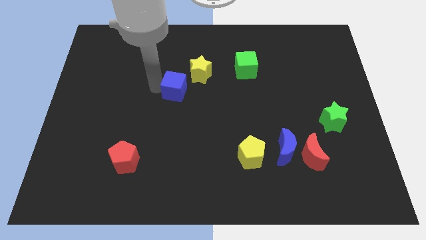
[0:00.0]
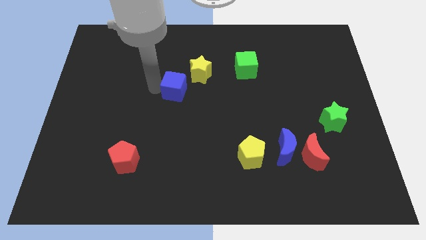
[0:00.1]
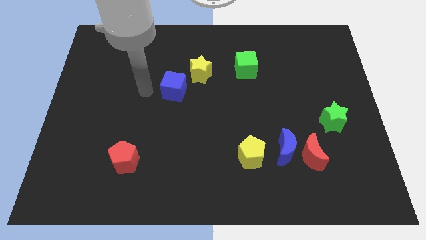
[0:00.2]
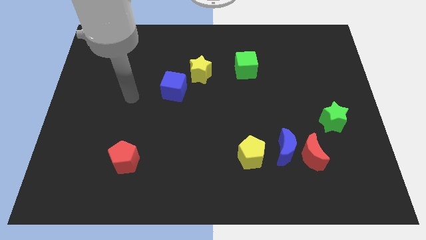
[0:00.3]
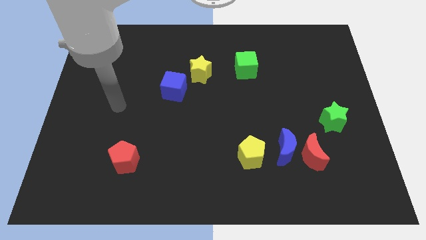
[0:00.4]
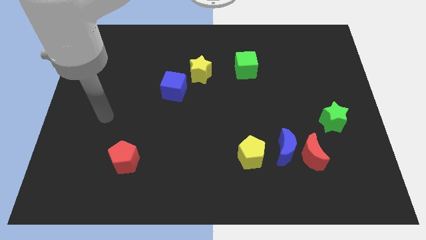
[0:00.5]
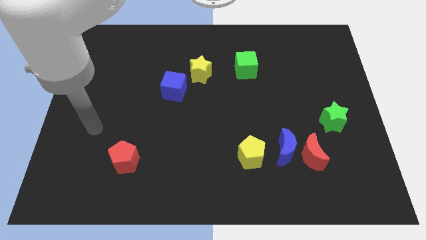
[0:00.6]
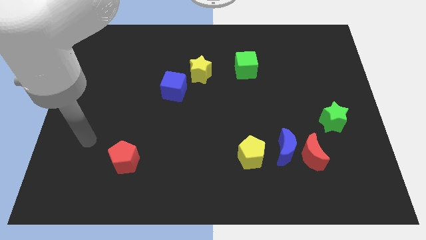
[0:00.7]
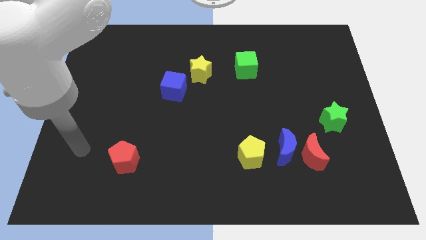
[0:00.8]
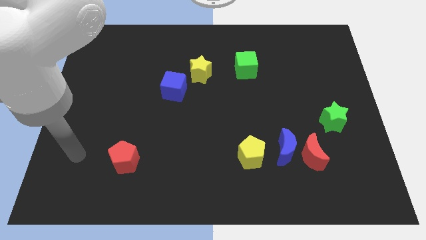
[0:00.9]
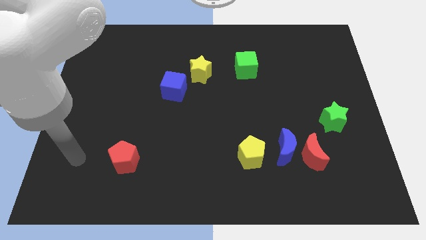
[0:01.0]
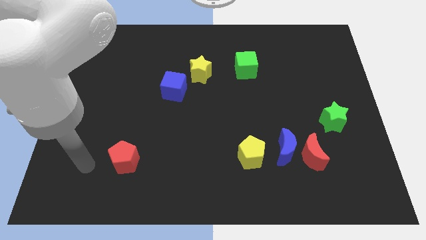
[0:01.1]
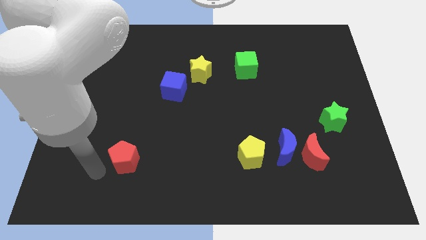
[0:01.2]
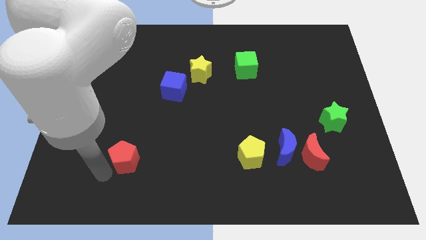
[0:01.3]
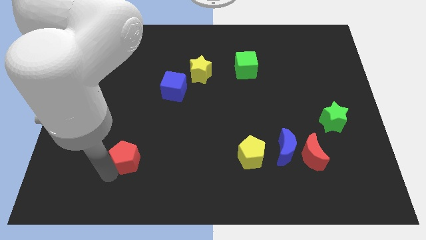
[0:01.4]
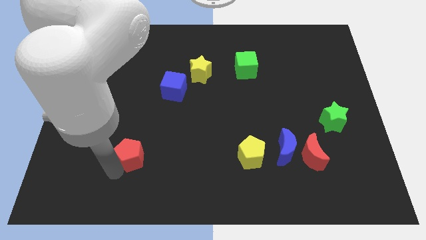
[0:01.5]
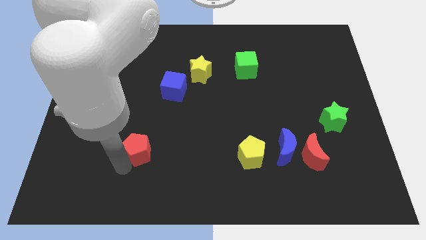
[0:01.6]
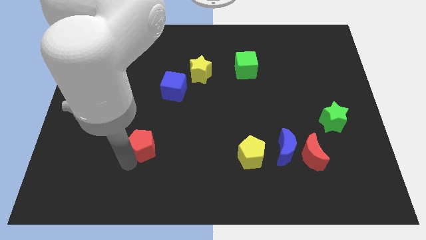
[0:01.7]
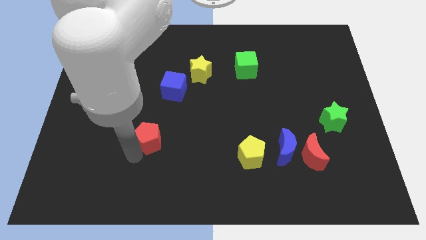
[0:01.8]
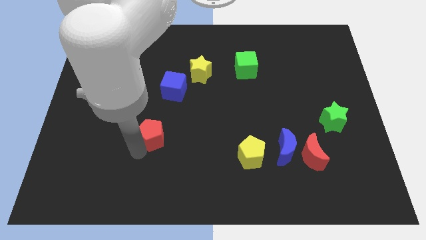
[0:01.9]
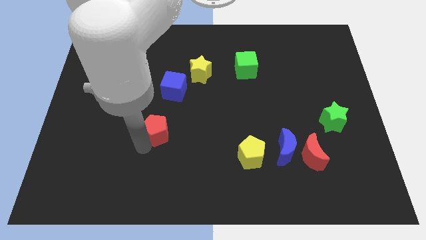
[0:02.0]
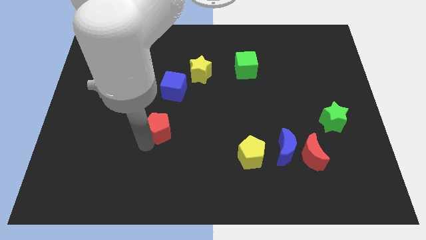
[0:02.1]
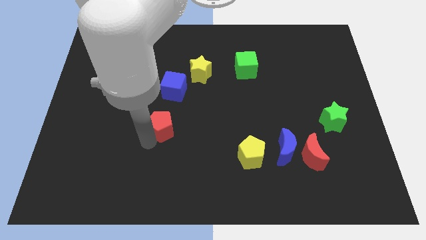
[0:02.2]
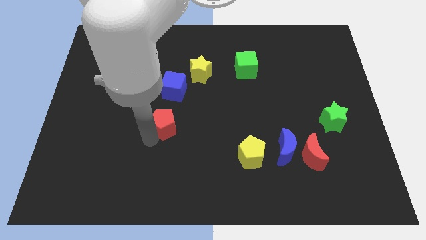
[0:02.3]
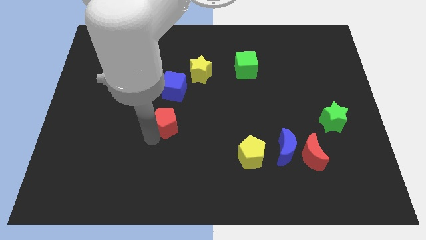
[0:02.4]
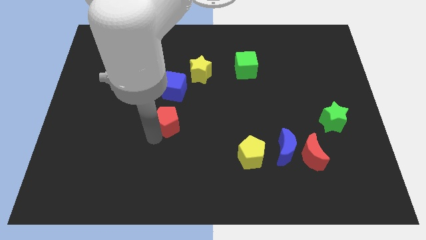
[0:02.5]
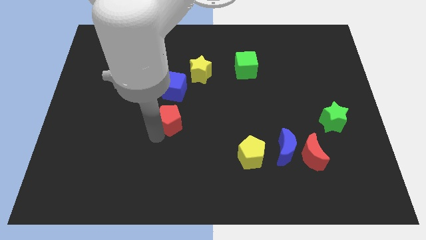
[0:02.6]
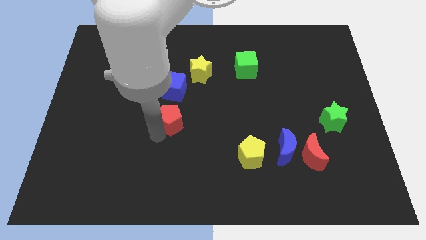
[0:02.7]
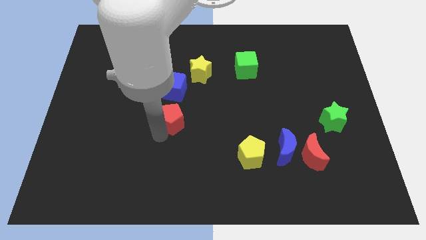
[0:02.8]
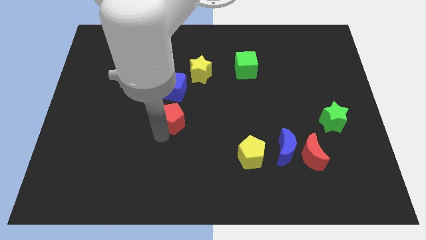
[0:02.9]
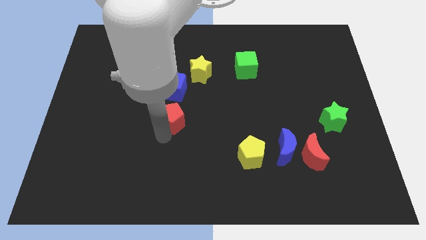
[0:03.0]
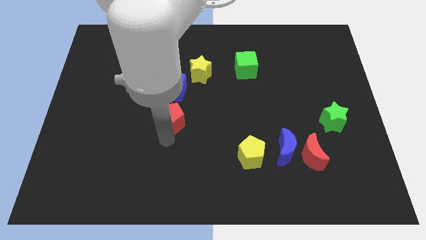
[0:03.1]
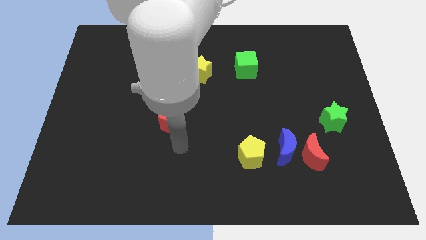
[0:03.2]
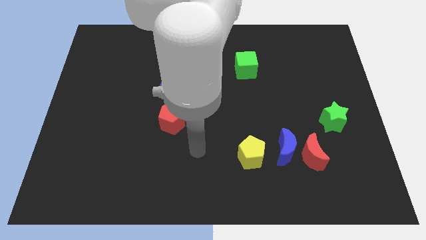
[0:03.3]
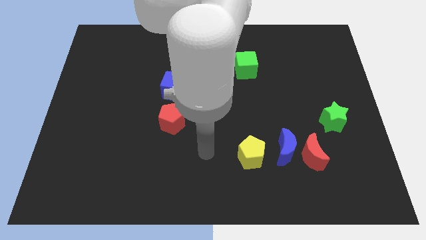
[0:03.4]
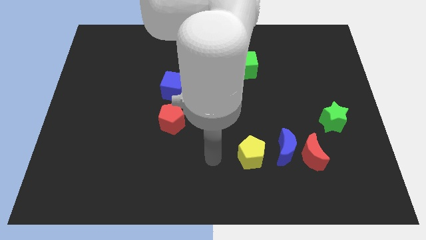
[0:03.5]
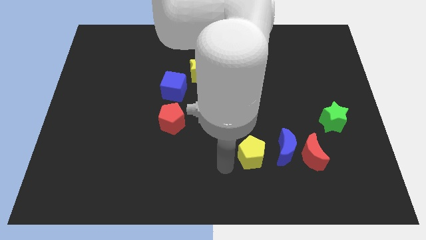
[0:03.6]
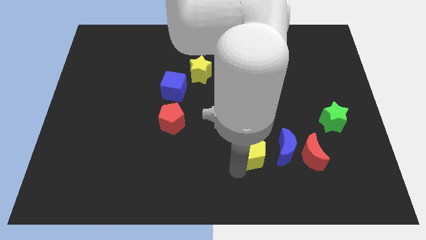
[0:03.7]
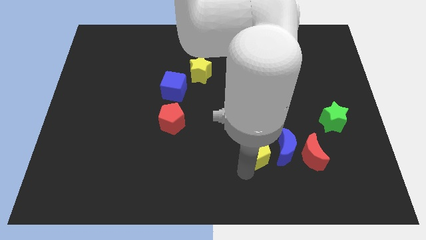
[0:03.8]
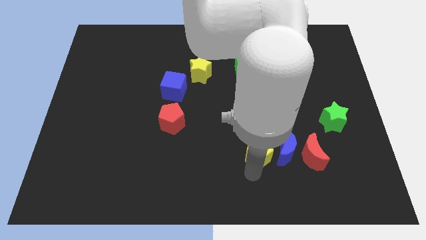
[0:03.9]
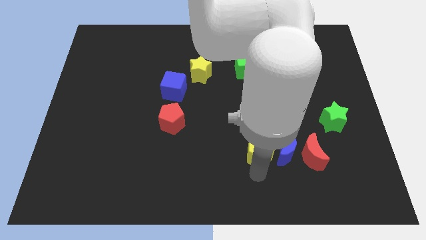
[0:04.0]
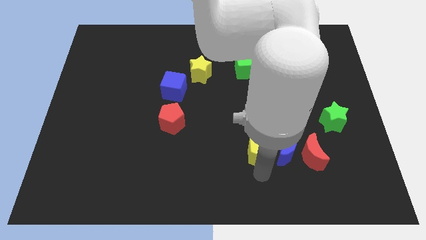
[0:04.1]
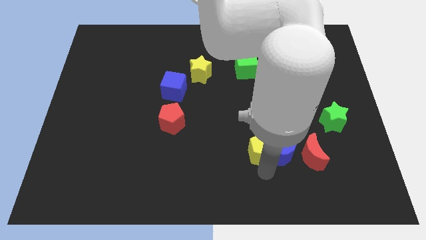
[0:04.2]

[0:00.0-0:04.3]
move away from the blue cube

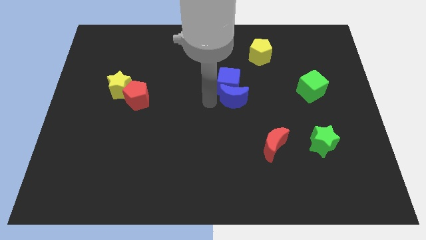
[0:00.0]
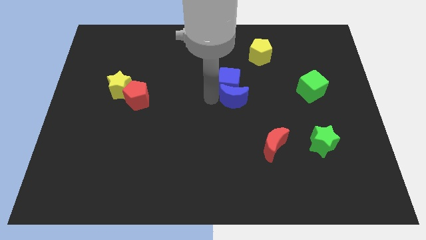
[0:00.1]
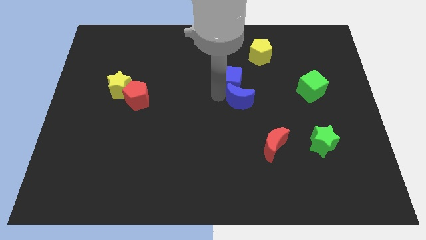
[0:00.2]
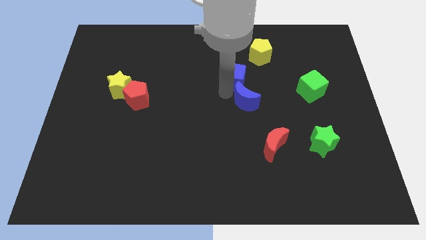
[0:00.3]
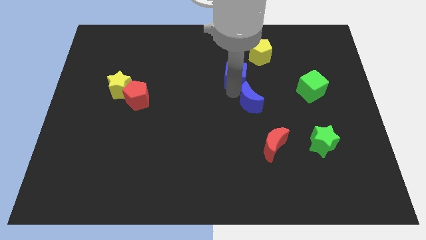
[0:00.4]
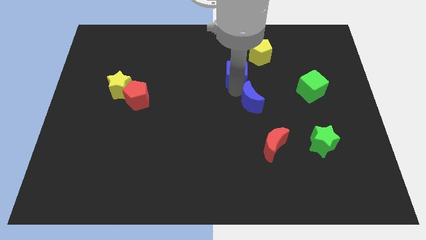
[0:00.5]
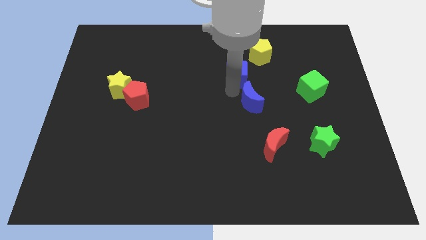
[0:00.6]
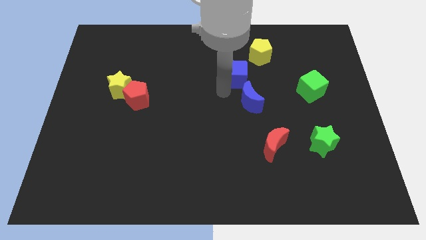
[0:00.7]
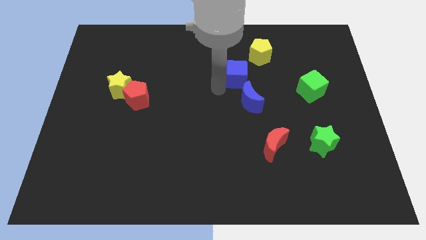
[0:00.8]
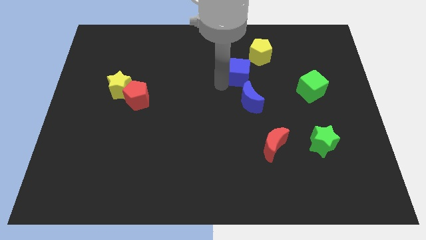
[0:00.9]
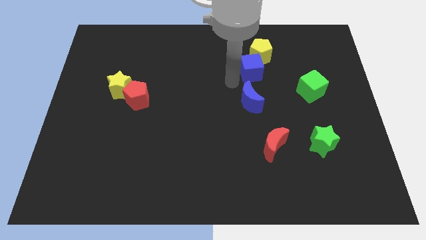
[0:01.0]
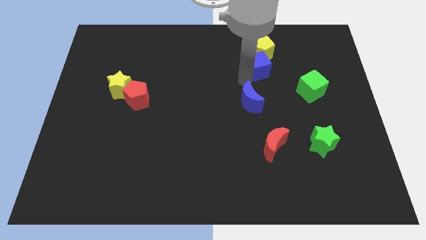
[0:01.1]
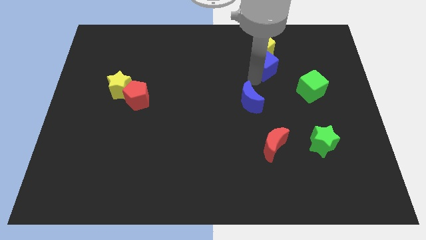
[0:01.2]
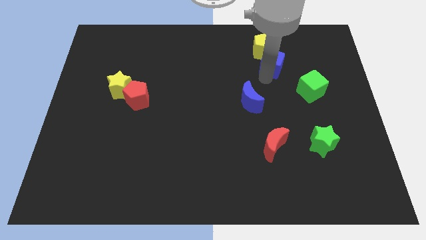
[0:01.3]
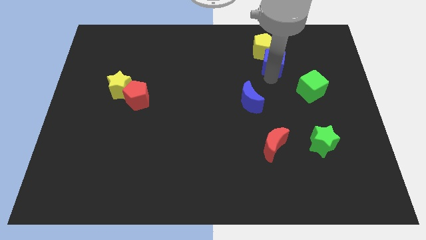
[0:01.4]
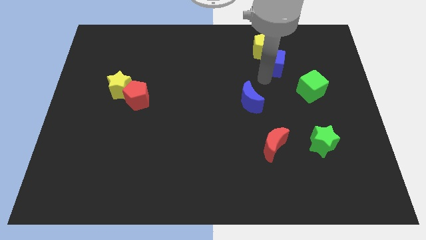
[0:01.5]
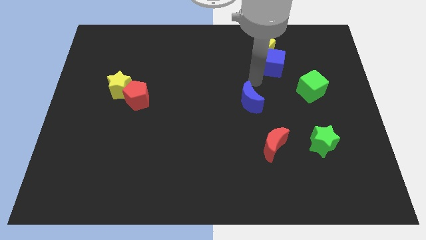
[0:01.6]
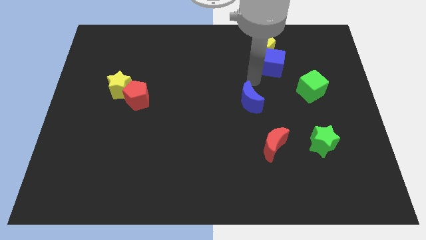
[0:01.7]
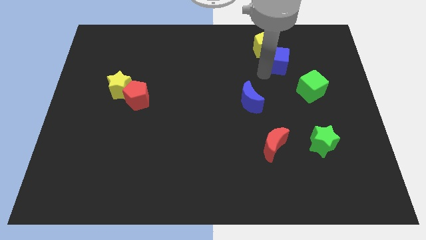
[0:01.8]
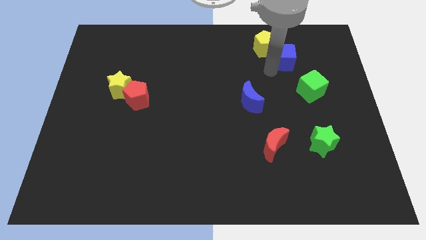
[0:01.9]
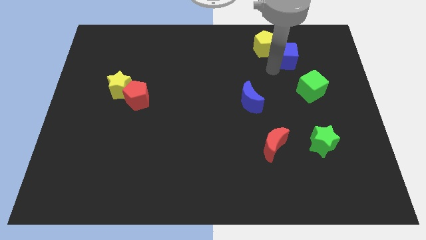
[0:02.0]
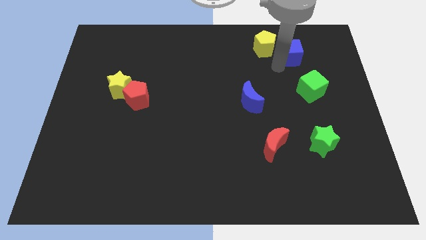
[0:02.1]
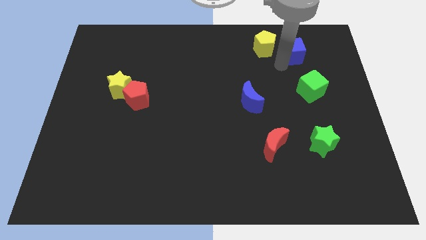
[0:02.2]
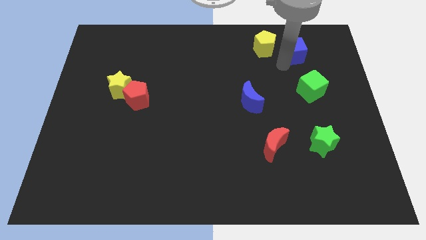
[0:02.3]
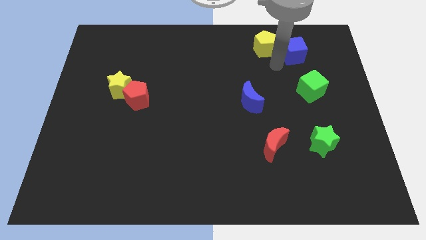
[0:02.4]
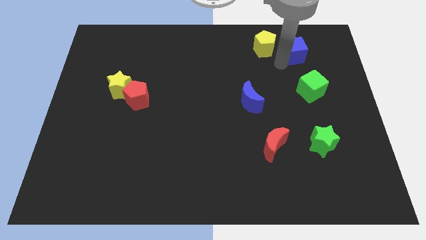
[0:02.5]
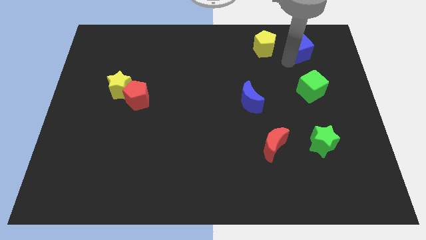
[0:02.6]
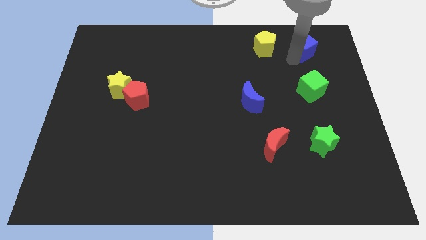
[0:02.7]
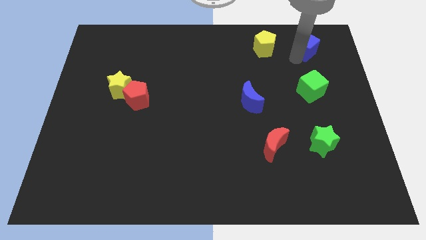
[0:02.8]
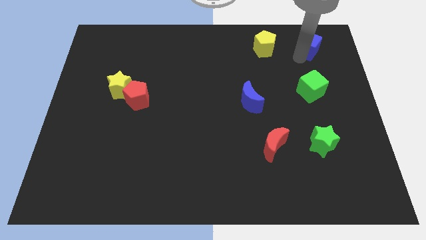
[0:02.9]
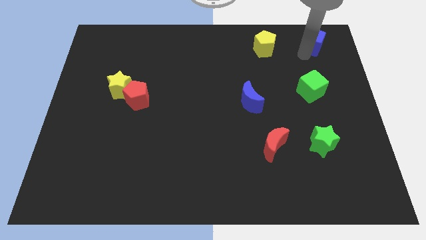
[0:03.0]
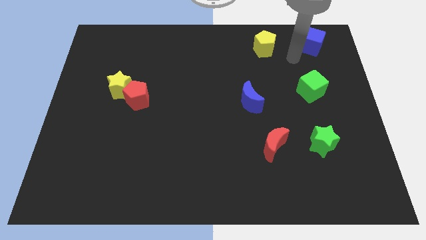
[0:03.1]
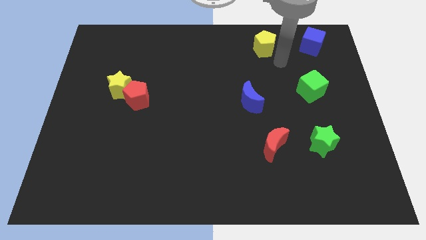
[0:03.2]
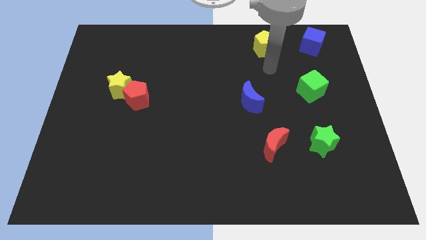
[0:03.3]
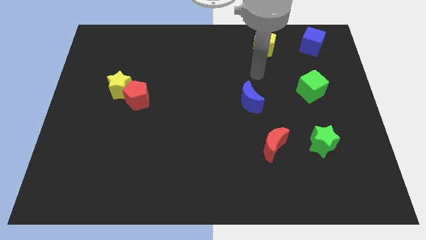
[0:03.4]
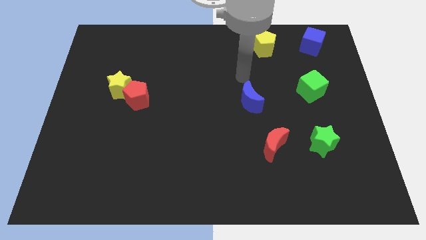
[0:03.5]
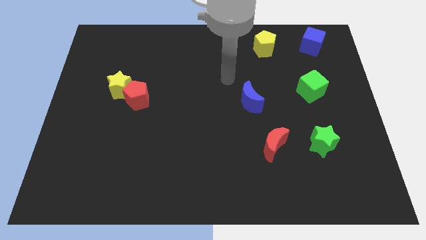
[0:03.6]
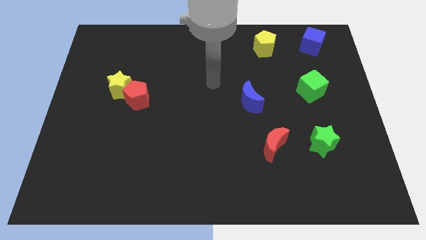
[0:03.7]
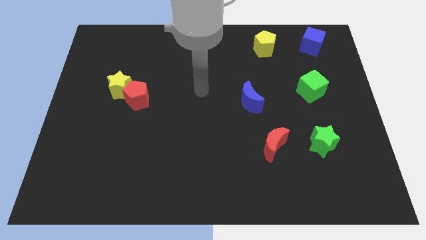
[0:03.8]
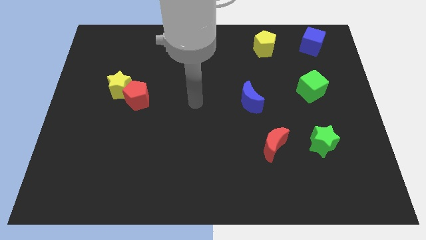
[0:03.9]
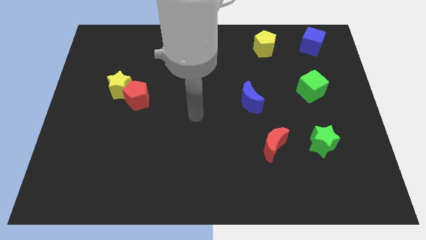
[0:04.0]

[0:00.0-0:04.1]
push blue cube towards top right

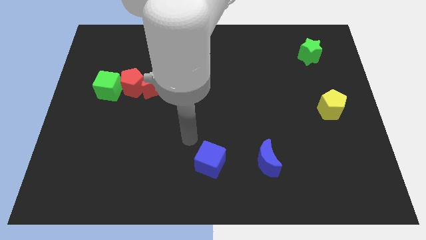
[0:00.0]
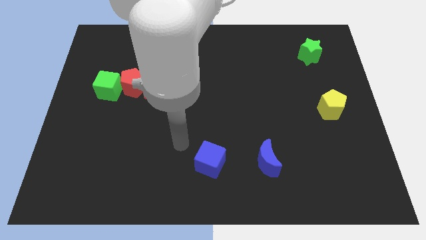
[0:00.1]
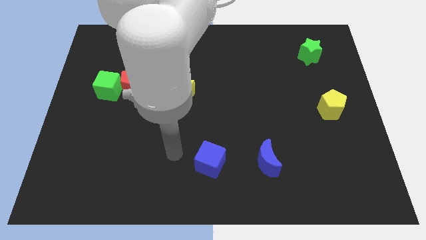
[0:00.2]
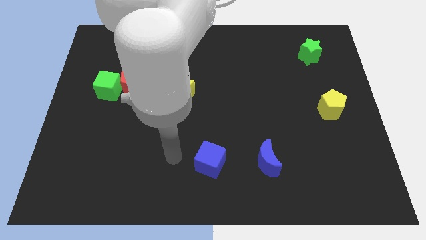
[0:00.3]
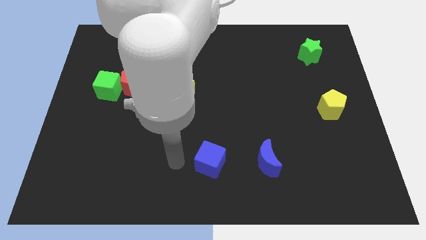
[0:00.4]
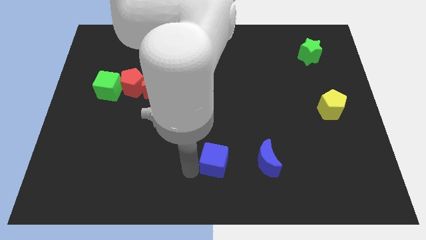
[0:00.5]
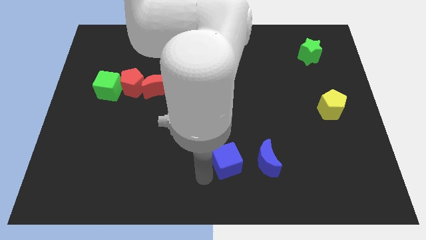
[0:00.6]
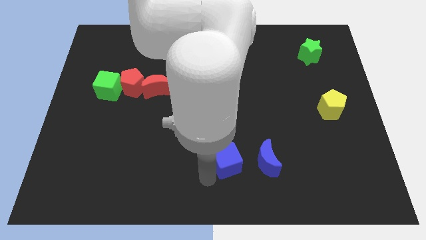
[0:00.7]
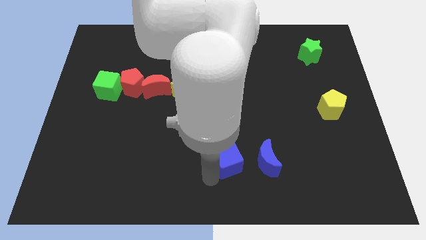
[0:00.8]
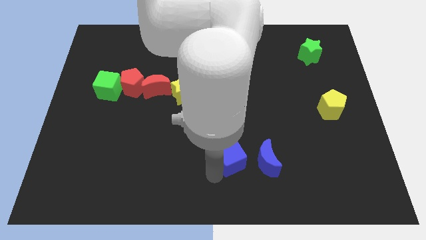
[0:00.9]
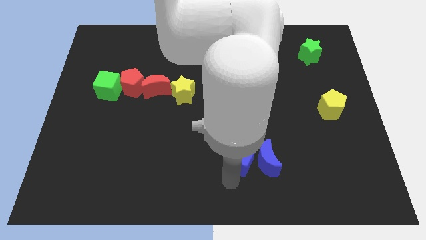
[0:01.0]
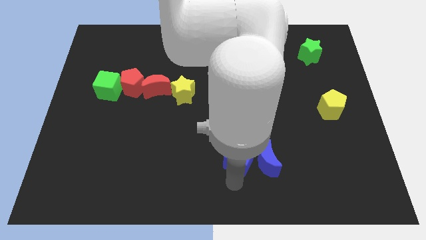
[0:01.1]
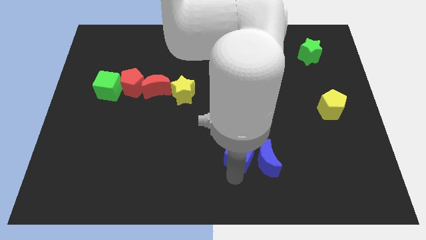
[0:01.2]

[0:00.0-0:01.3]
slightly move the blue cube towards the right
